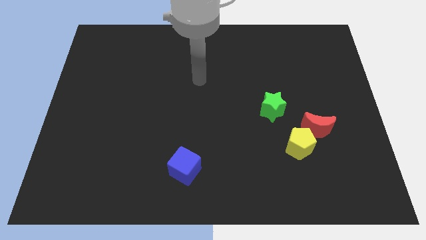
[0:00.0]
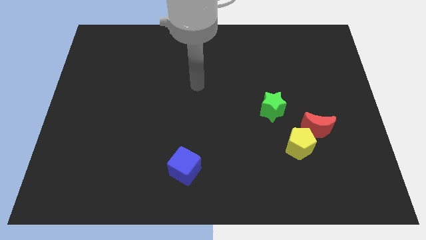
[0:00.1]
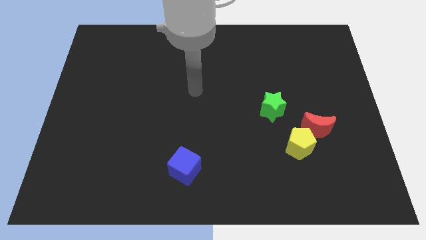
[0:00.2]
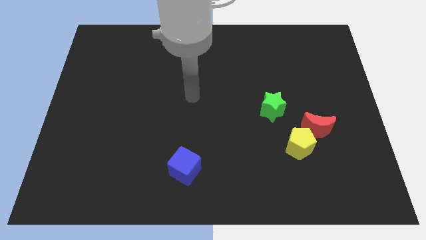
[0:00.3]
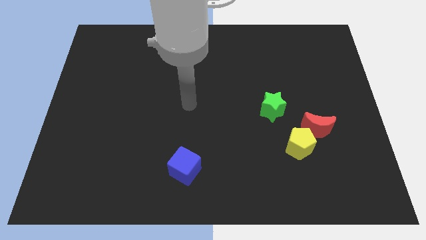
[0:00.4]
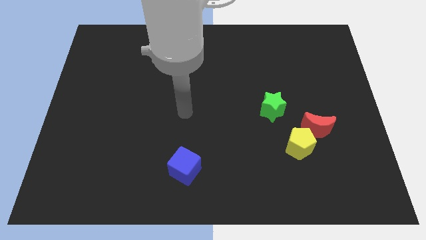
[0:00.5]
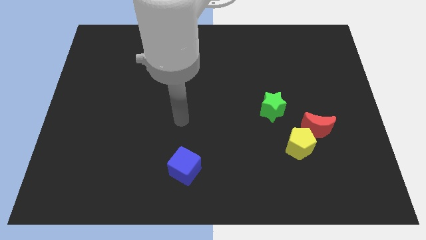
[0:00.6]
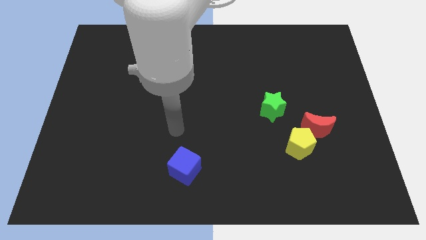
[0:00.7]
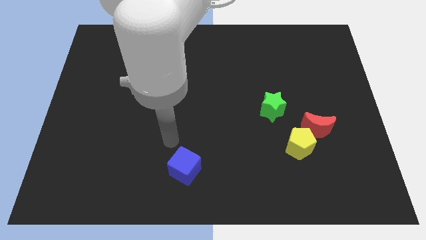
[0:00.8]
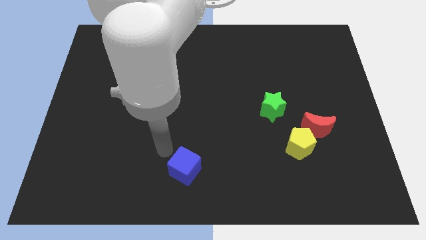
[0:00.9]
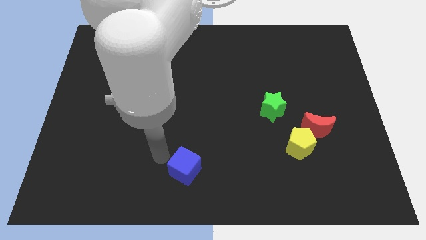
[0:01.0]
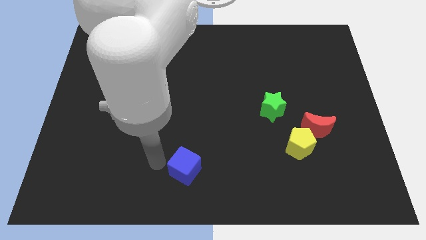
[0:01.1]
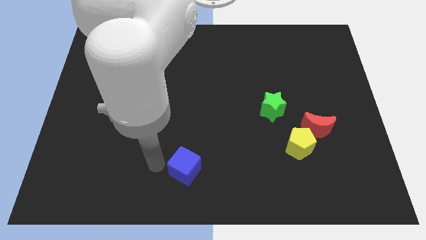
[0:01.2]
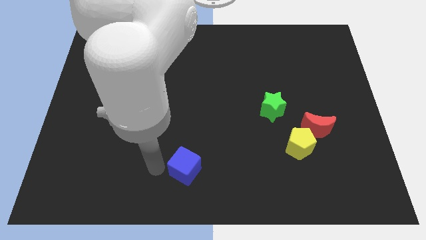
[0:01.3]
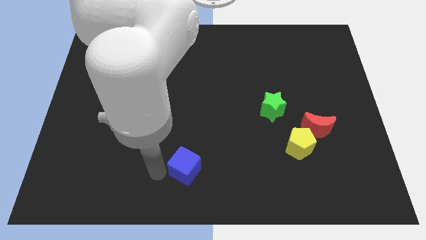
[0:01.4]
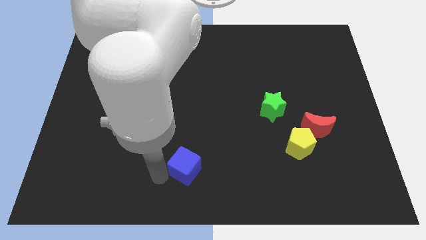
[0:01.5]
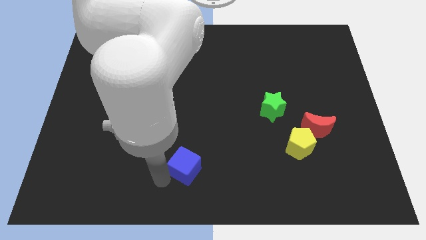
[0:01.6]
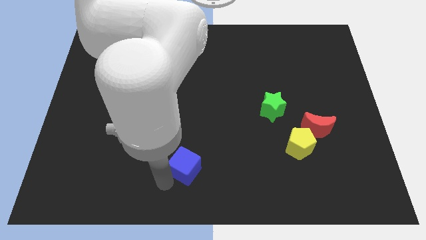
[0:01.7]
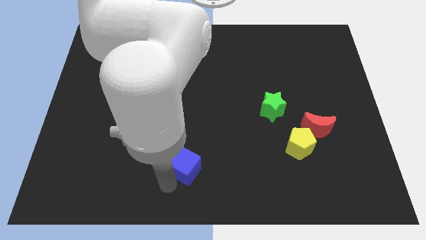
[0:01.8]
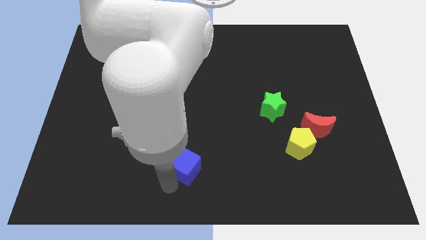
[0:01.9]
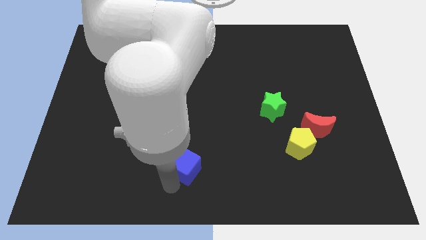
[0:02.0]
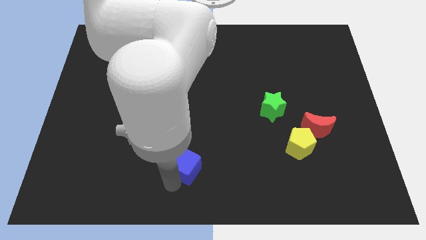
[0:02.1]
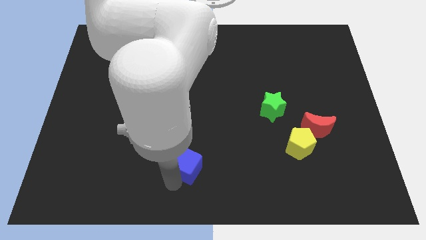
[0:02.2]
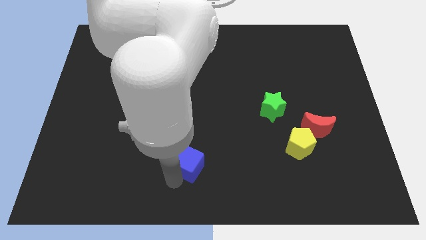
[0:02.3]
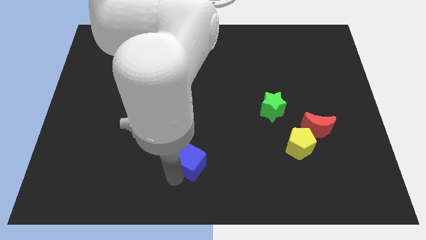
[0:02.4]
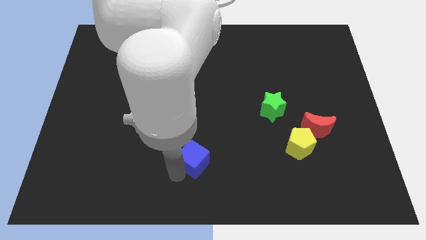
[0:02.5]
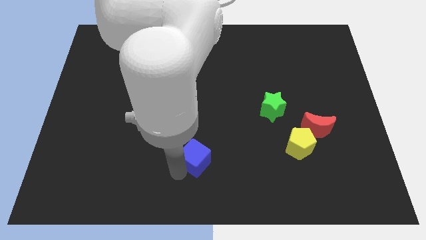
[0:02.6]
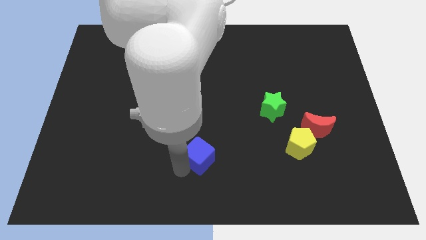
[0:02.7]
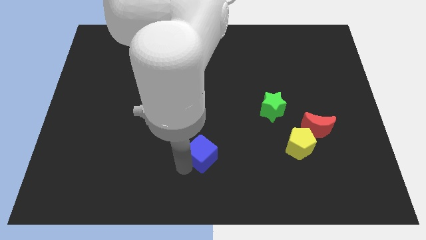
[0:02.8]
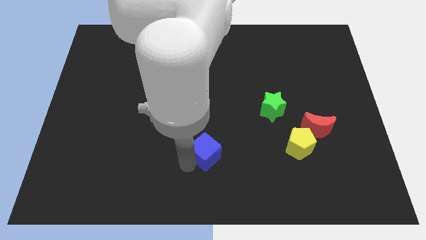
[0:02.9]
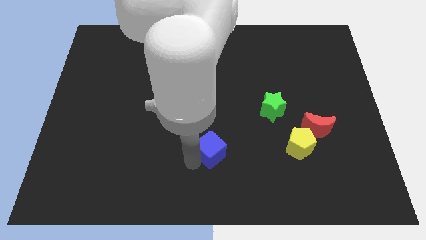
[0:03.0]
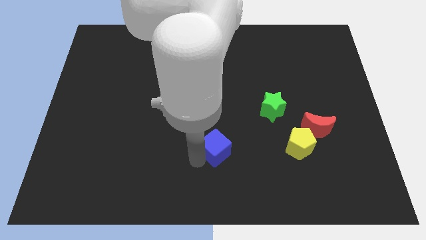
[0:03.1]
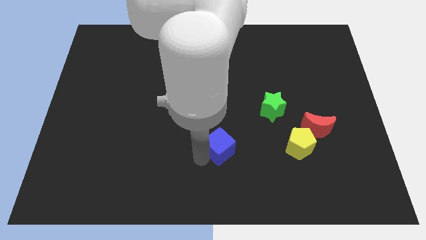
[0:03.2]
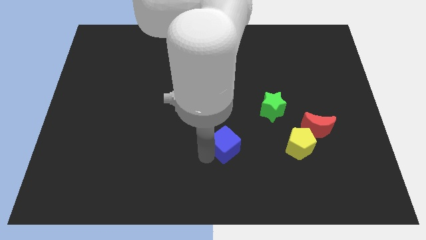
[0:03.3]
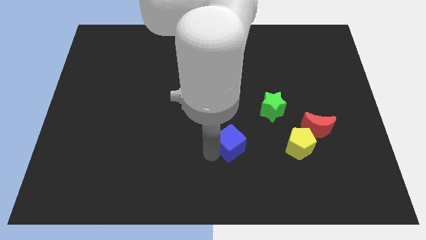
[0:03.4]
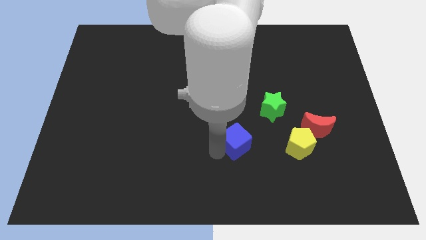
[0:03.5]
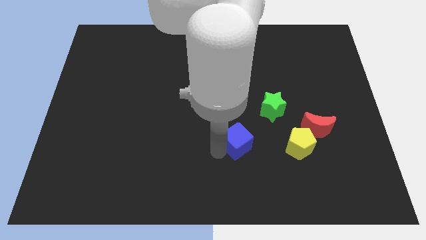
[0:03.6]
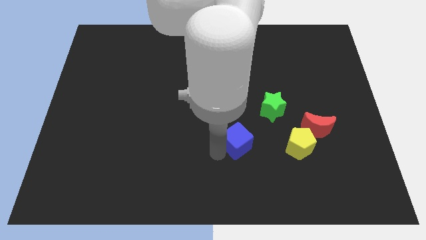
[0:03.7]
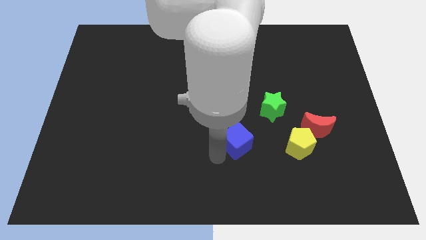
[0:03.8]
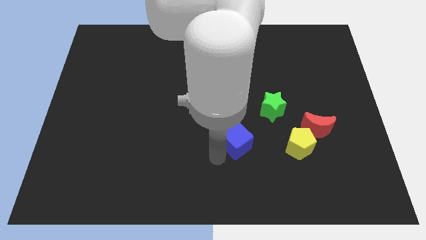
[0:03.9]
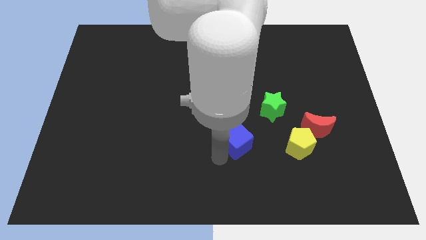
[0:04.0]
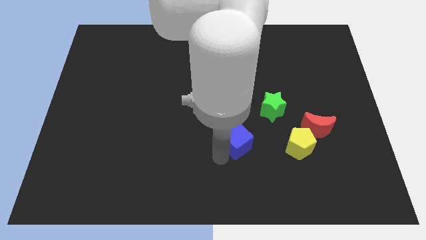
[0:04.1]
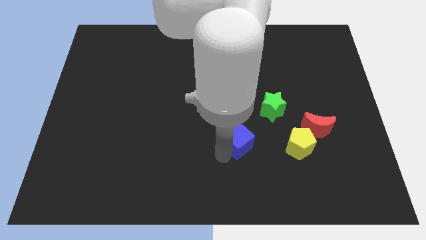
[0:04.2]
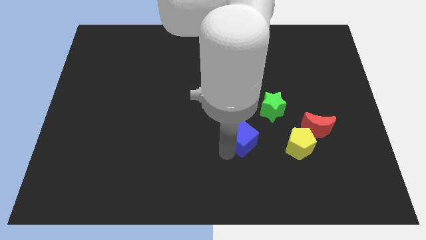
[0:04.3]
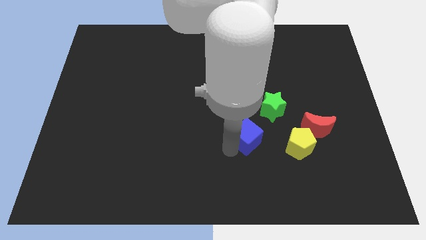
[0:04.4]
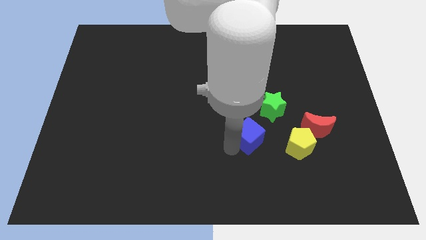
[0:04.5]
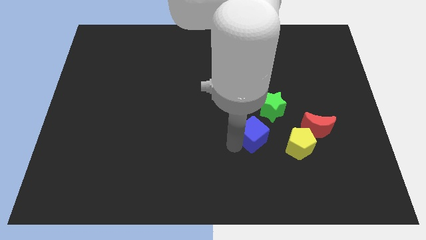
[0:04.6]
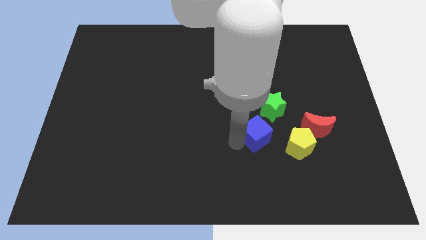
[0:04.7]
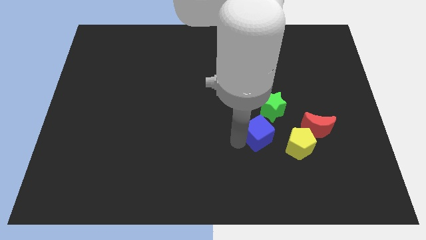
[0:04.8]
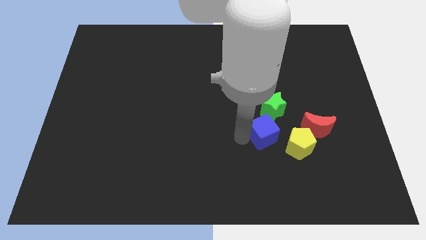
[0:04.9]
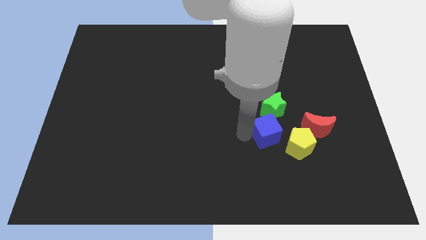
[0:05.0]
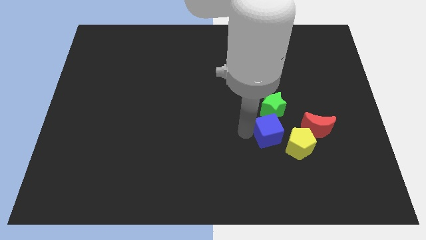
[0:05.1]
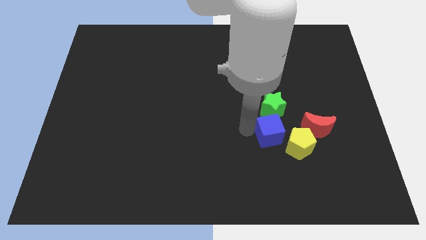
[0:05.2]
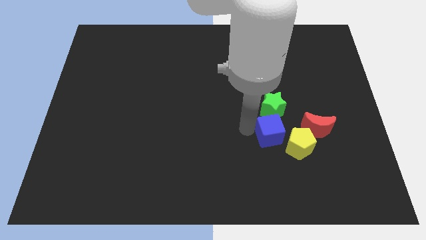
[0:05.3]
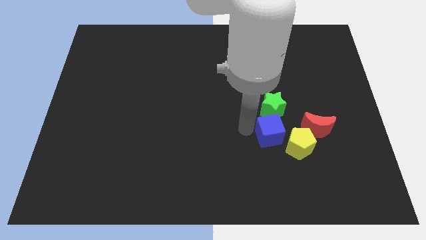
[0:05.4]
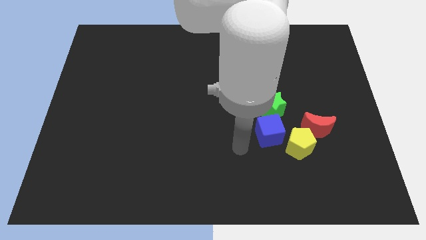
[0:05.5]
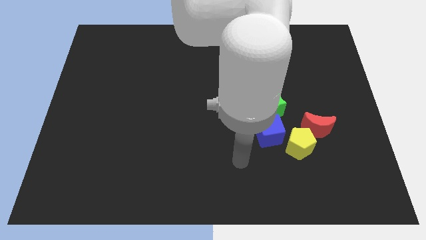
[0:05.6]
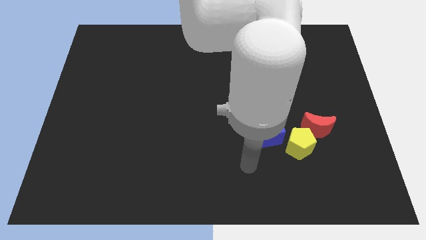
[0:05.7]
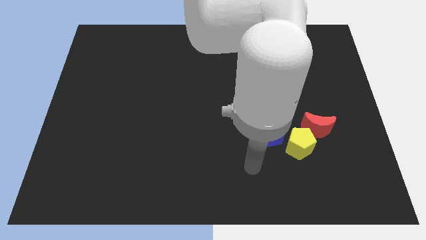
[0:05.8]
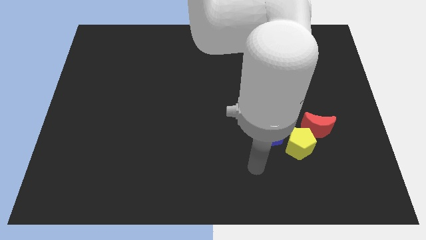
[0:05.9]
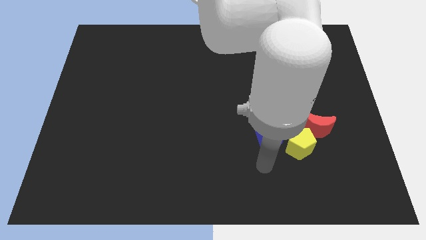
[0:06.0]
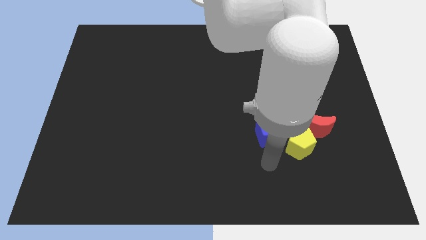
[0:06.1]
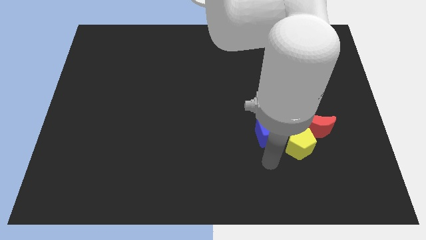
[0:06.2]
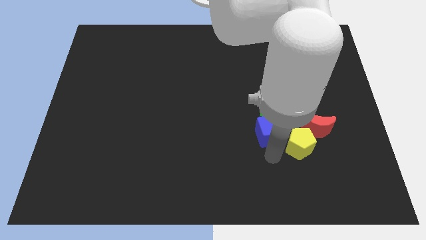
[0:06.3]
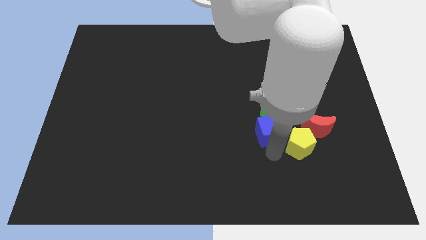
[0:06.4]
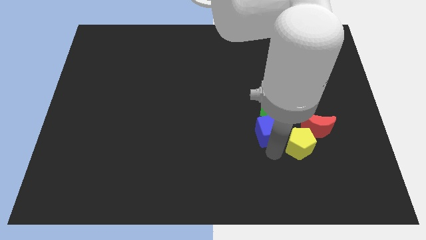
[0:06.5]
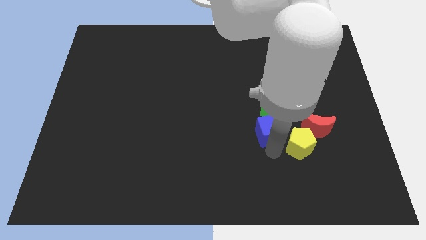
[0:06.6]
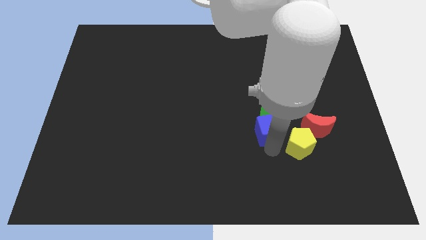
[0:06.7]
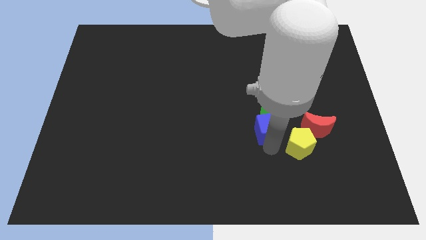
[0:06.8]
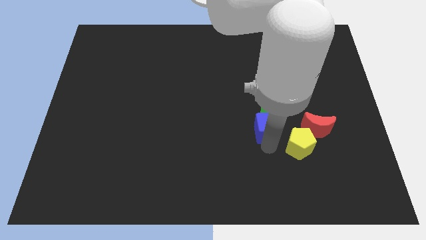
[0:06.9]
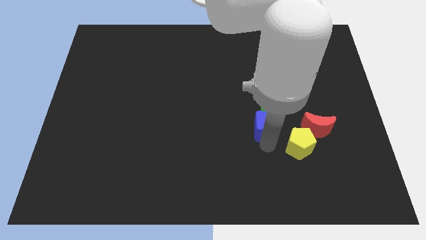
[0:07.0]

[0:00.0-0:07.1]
move the blue block next to the green star

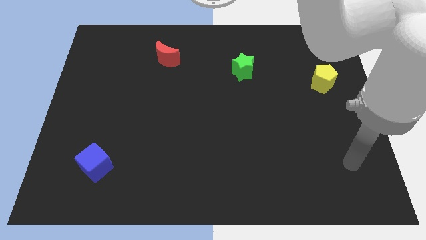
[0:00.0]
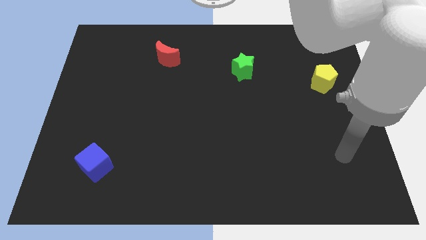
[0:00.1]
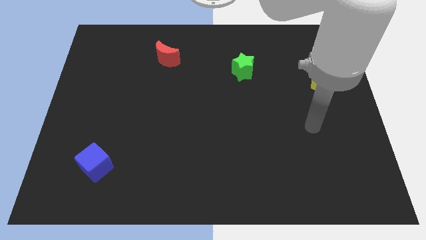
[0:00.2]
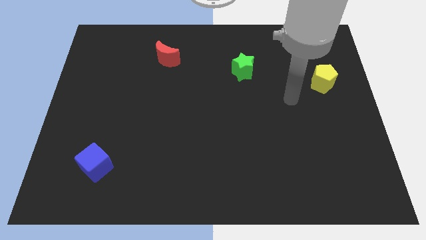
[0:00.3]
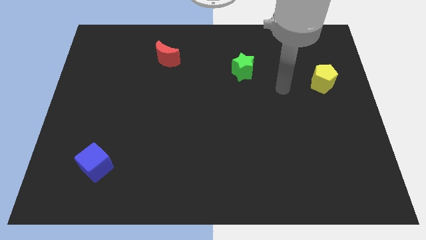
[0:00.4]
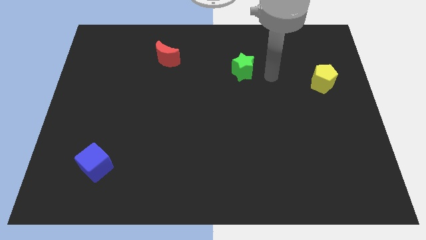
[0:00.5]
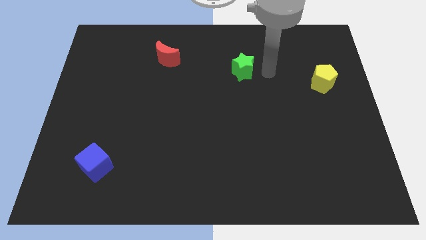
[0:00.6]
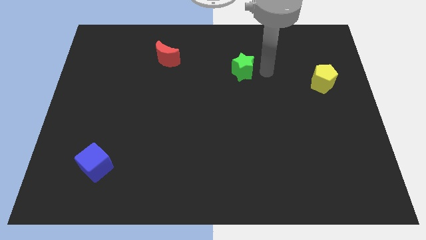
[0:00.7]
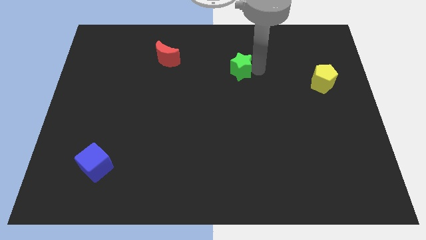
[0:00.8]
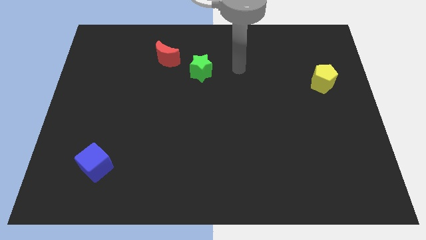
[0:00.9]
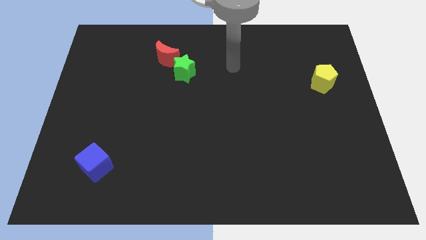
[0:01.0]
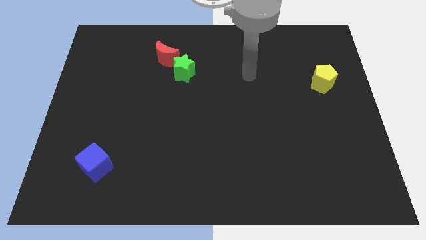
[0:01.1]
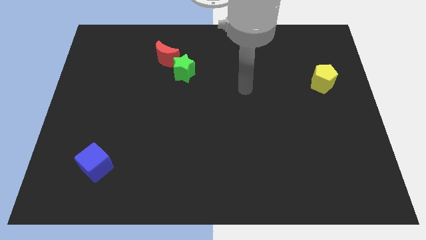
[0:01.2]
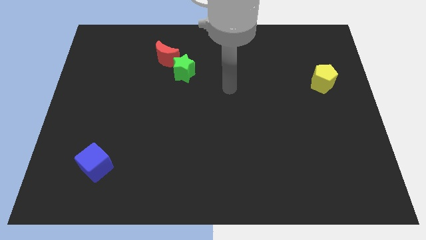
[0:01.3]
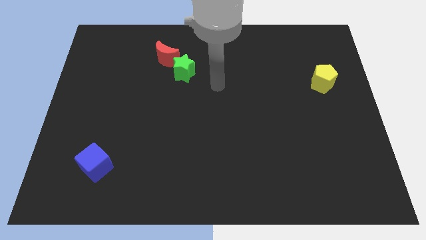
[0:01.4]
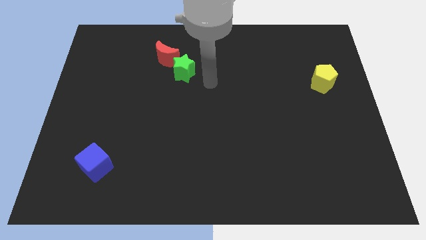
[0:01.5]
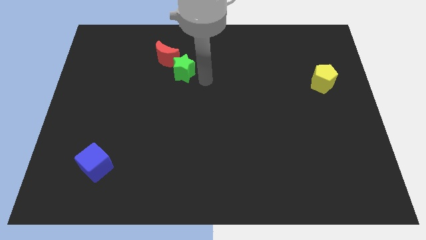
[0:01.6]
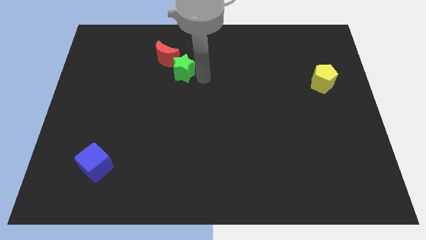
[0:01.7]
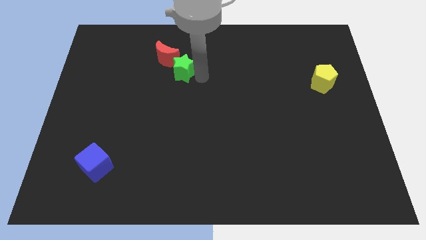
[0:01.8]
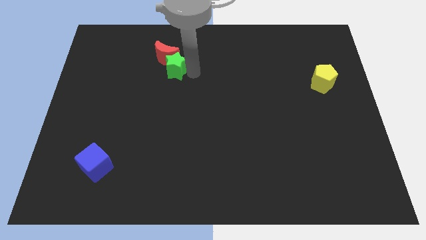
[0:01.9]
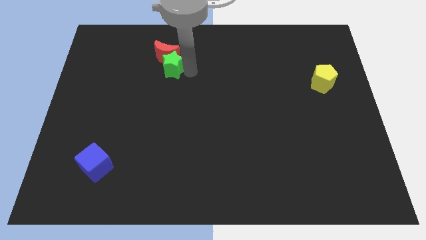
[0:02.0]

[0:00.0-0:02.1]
slide the green star towards the moon
